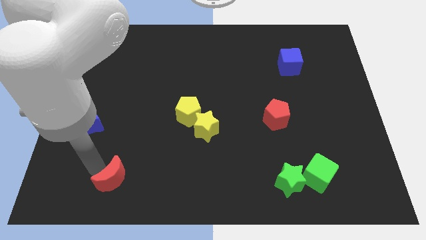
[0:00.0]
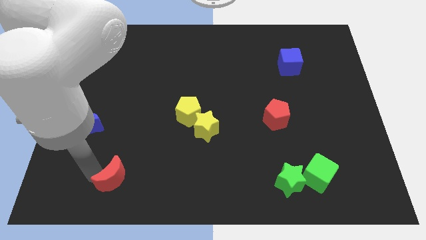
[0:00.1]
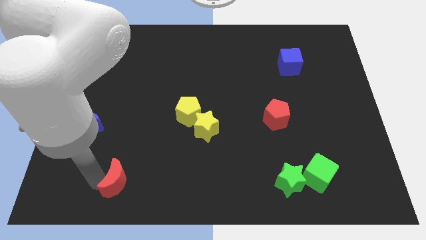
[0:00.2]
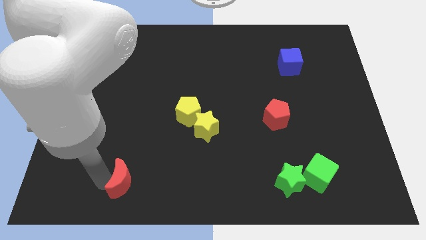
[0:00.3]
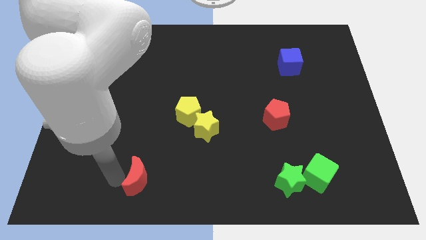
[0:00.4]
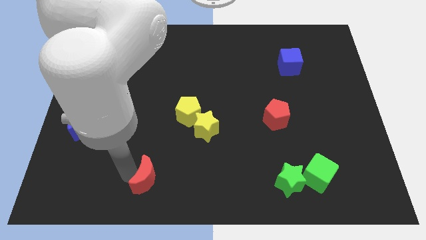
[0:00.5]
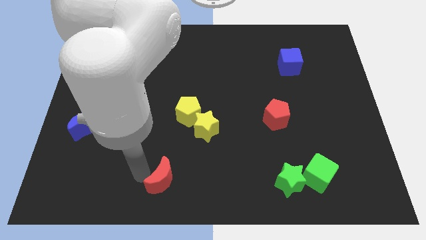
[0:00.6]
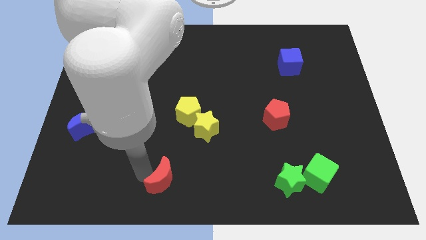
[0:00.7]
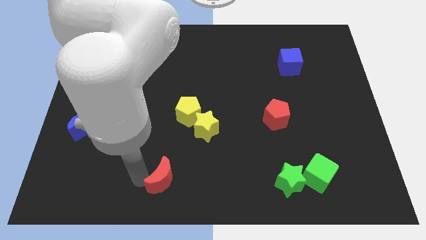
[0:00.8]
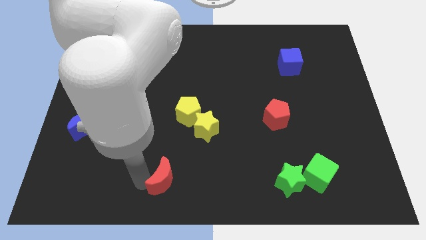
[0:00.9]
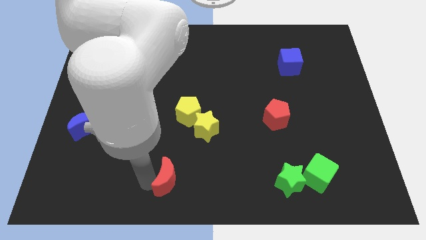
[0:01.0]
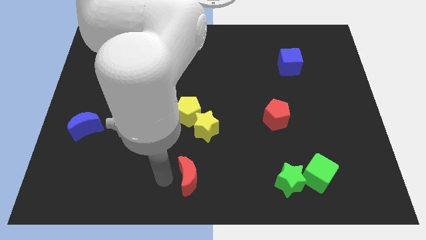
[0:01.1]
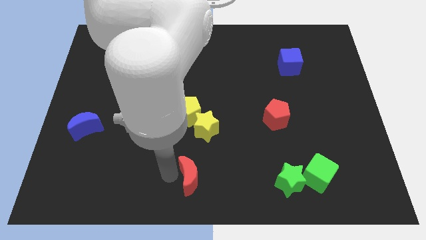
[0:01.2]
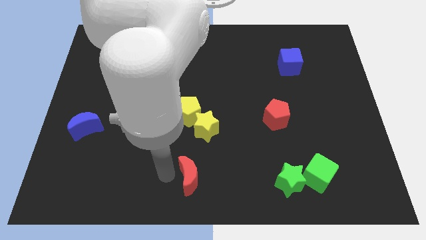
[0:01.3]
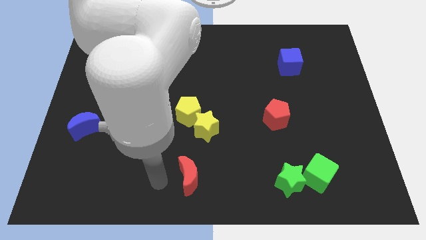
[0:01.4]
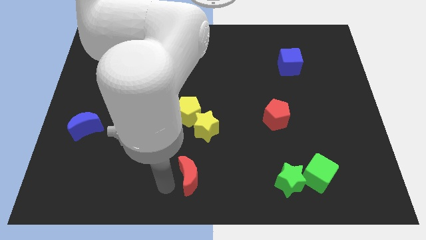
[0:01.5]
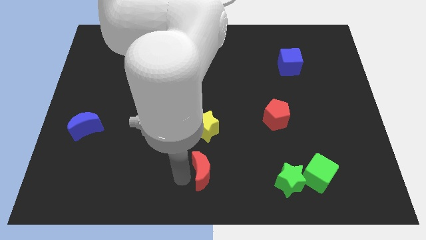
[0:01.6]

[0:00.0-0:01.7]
place the red crescent at the bottom center of the board

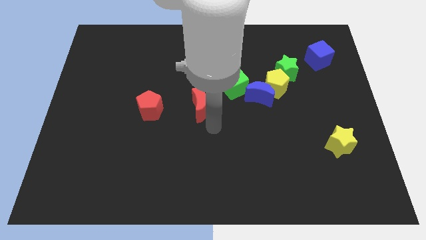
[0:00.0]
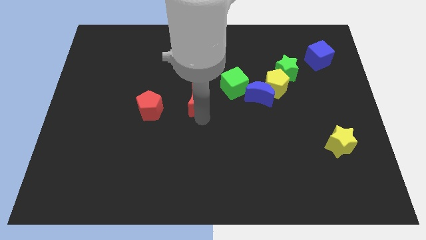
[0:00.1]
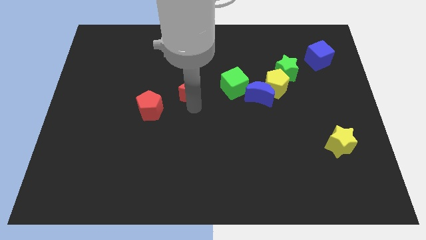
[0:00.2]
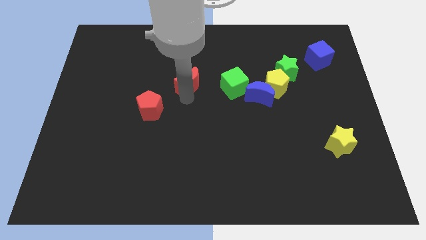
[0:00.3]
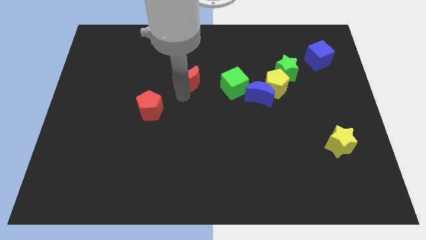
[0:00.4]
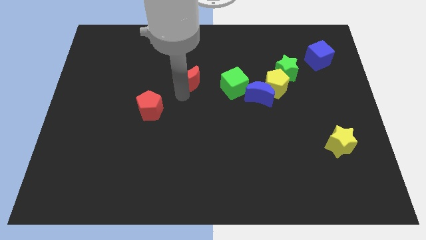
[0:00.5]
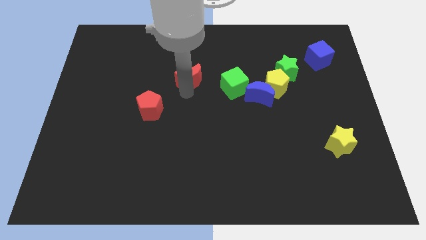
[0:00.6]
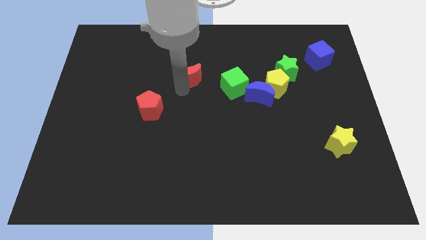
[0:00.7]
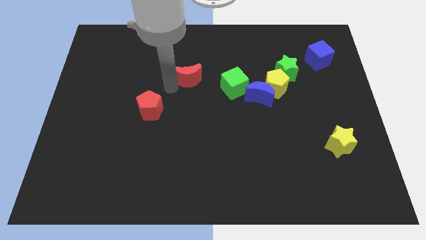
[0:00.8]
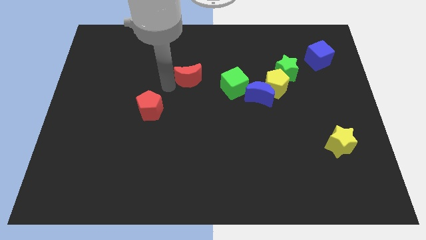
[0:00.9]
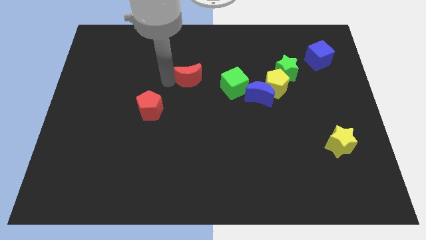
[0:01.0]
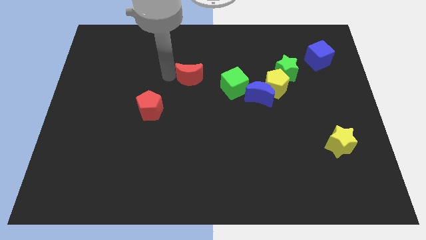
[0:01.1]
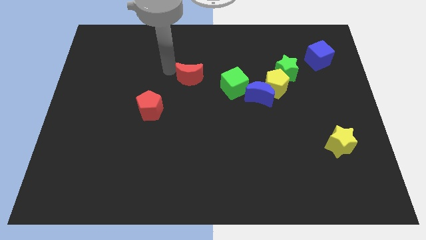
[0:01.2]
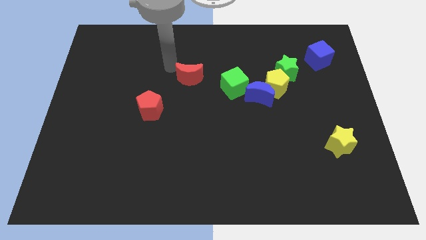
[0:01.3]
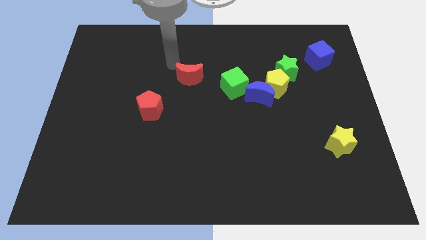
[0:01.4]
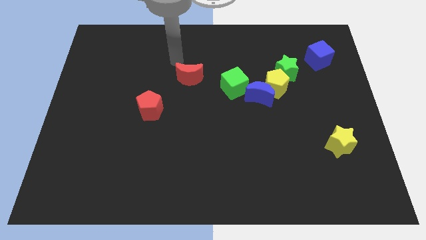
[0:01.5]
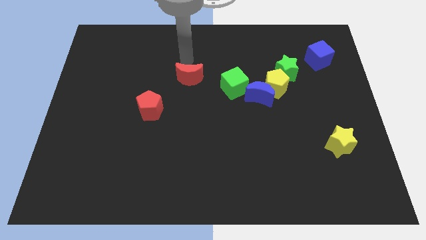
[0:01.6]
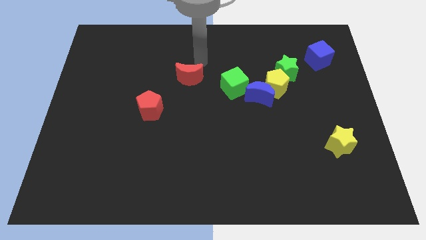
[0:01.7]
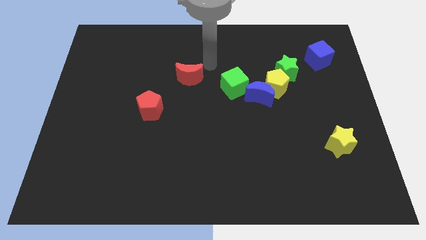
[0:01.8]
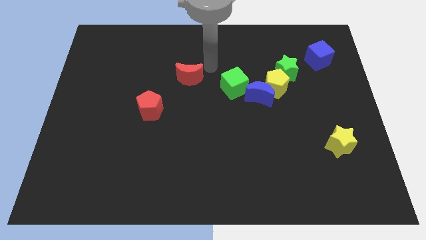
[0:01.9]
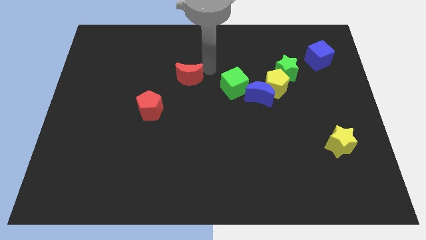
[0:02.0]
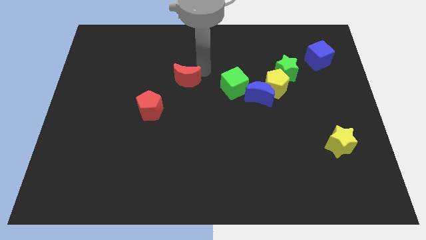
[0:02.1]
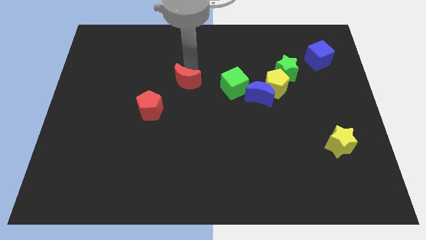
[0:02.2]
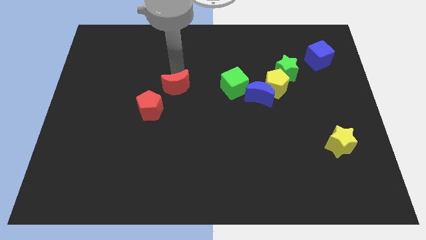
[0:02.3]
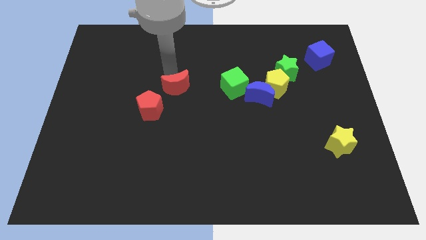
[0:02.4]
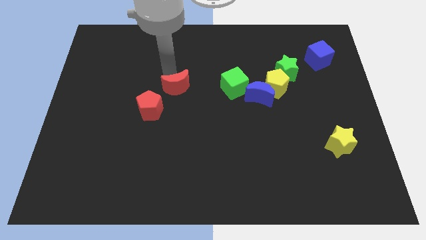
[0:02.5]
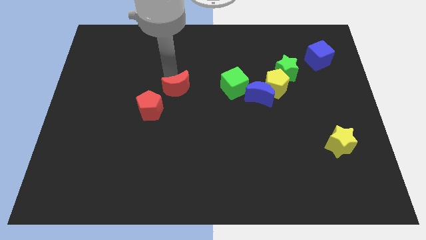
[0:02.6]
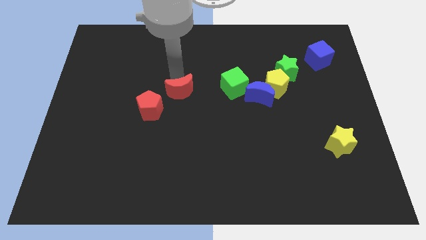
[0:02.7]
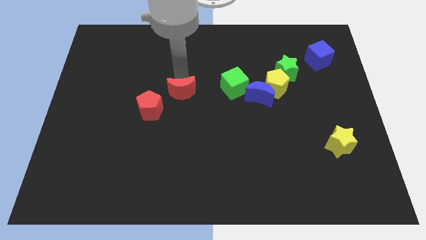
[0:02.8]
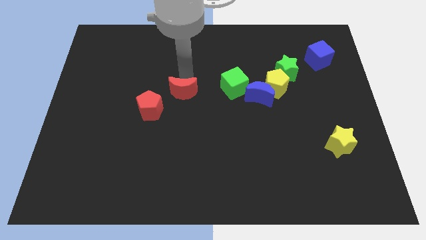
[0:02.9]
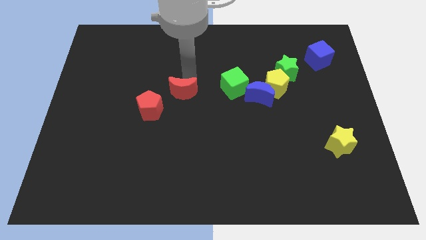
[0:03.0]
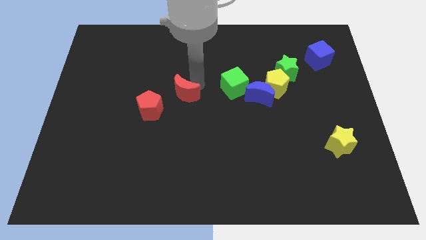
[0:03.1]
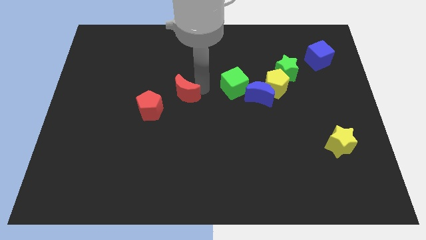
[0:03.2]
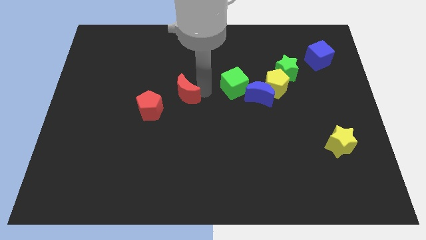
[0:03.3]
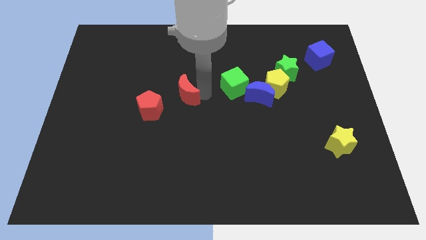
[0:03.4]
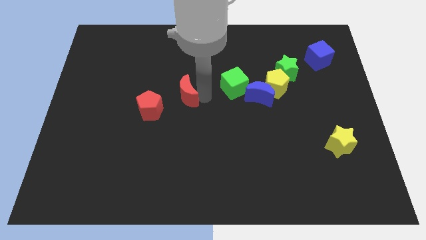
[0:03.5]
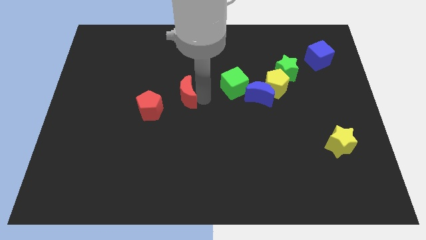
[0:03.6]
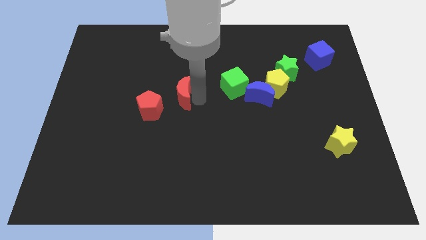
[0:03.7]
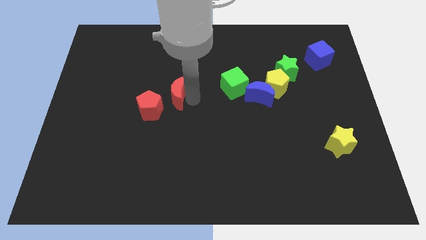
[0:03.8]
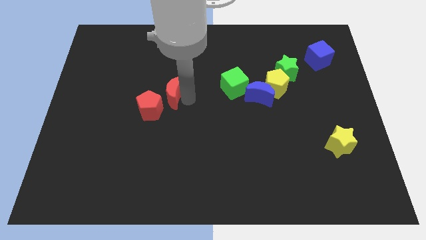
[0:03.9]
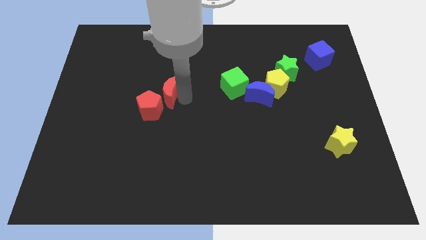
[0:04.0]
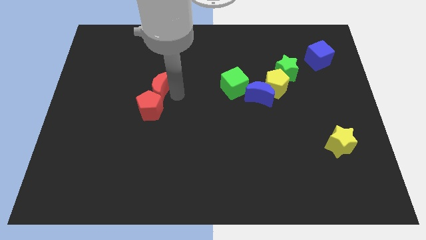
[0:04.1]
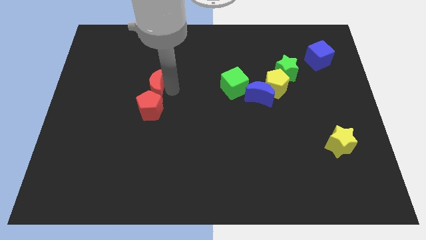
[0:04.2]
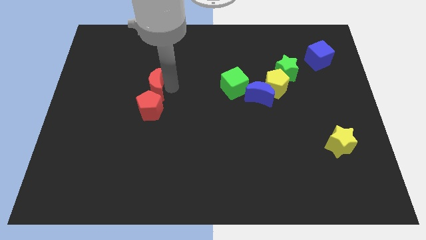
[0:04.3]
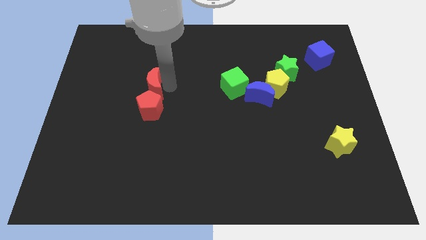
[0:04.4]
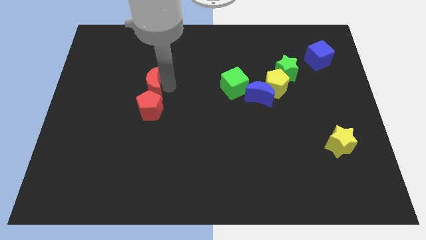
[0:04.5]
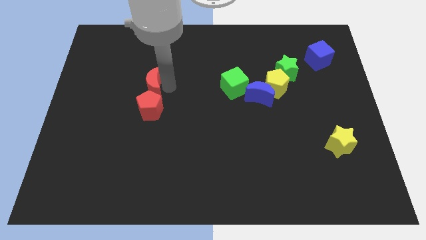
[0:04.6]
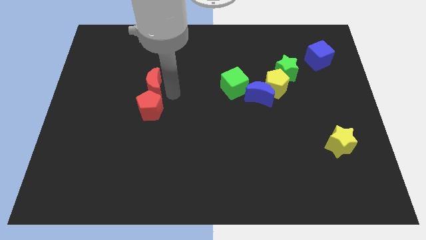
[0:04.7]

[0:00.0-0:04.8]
move the red crescent at the top side of the red pentagon

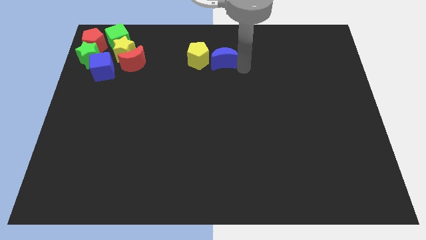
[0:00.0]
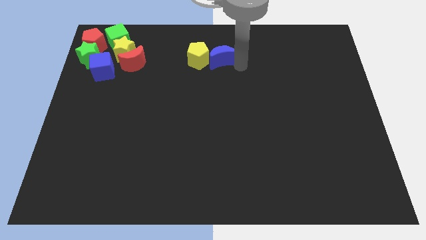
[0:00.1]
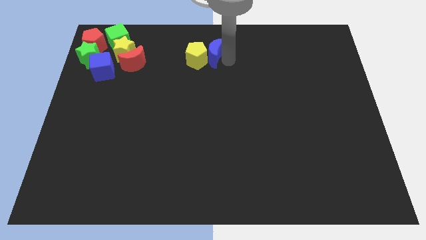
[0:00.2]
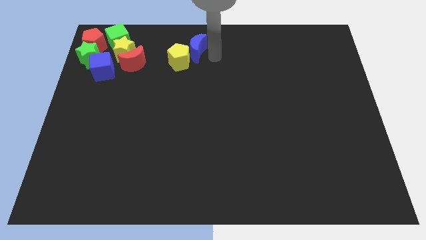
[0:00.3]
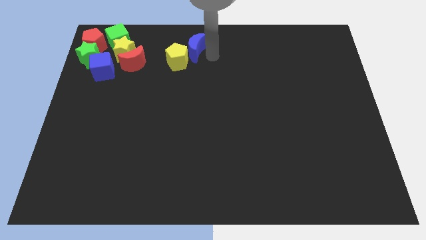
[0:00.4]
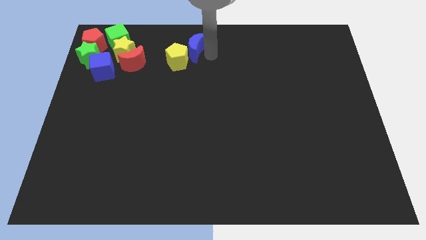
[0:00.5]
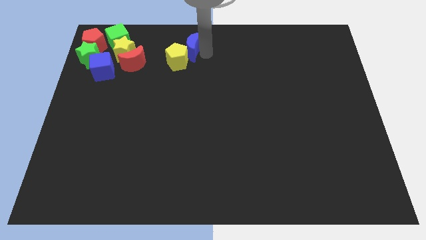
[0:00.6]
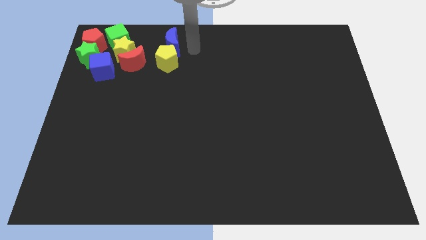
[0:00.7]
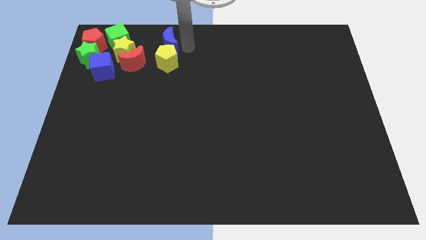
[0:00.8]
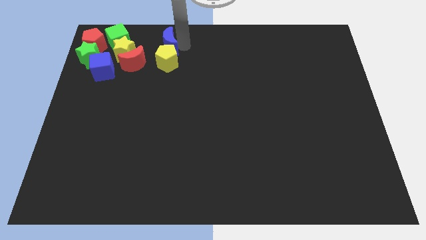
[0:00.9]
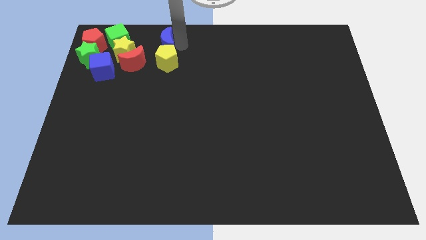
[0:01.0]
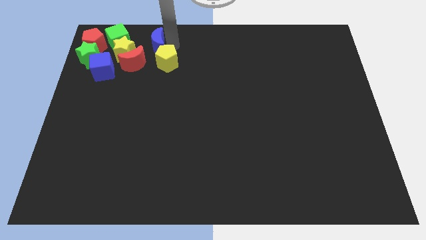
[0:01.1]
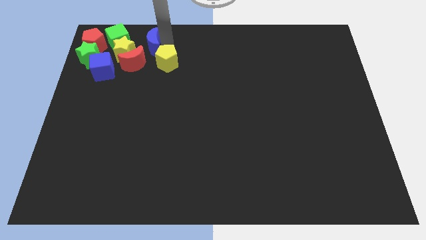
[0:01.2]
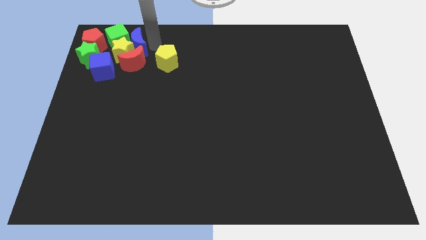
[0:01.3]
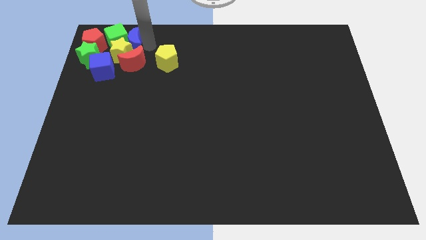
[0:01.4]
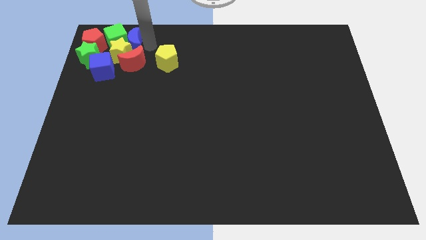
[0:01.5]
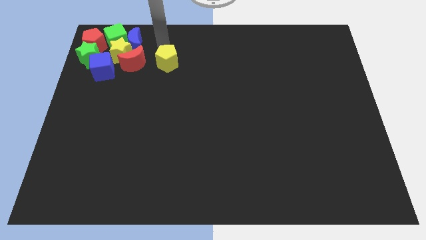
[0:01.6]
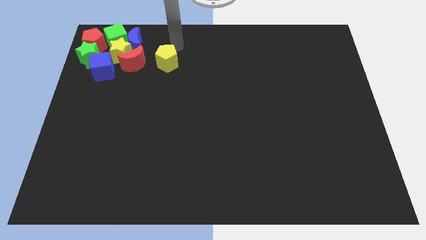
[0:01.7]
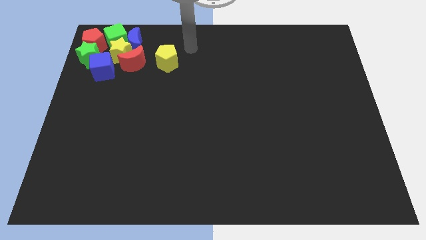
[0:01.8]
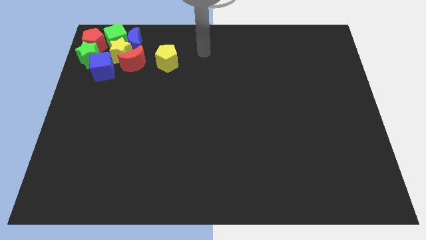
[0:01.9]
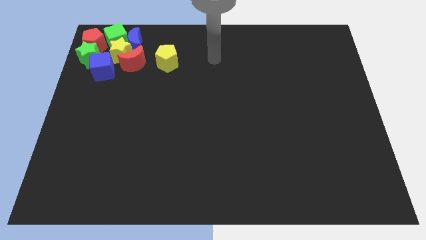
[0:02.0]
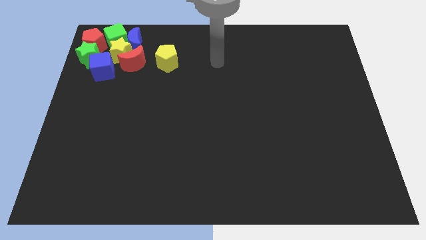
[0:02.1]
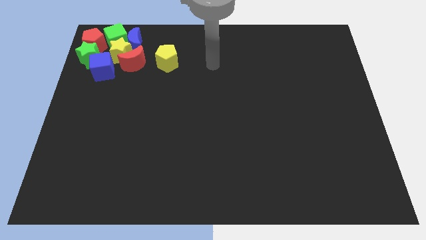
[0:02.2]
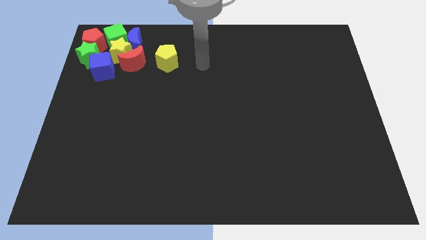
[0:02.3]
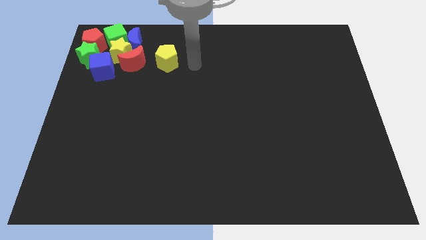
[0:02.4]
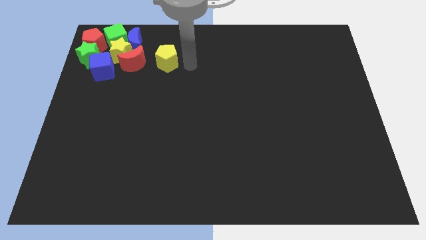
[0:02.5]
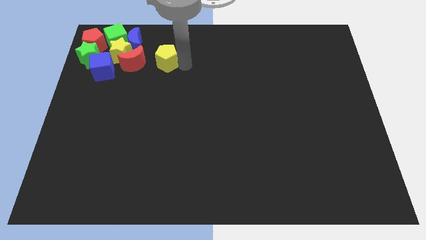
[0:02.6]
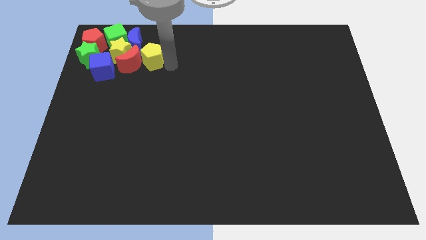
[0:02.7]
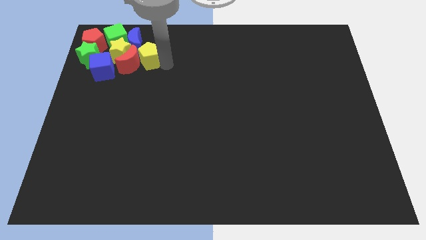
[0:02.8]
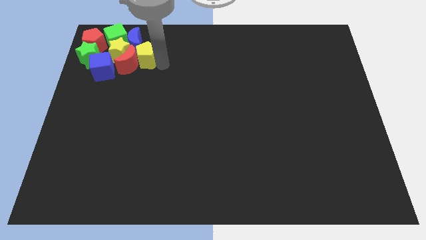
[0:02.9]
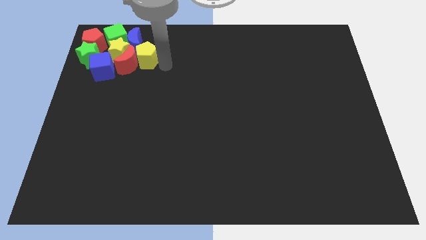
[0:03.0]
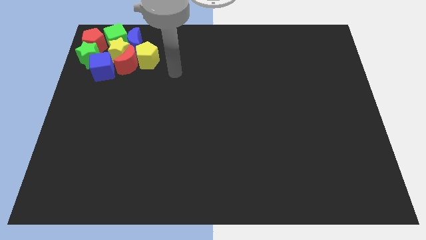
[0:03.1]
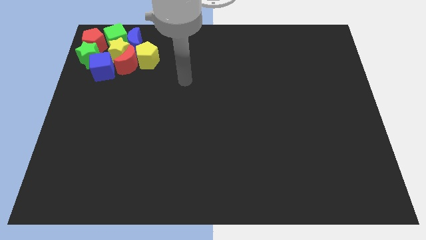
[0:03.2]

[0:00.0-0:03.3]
add blue moon and yellow pentagon to the group of blocks
